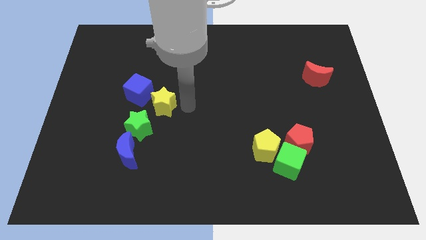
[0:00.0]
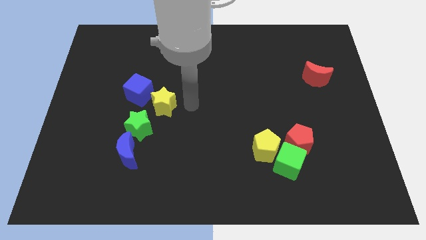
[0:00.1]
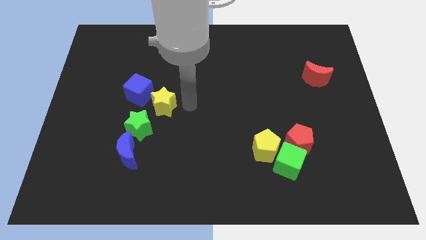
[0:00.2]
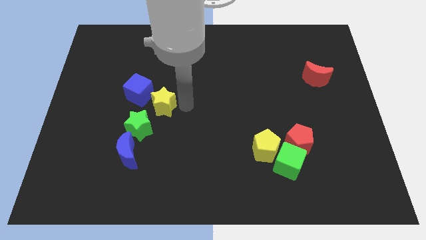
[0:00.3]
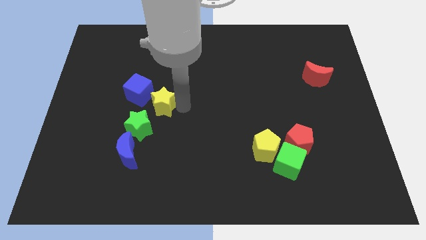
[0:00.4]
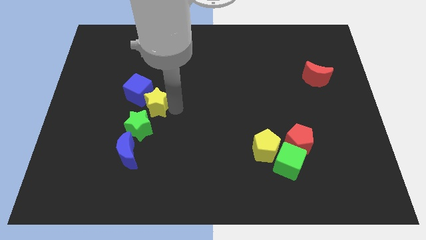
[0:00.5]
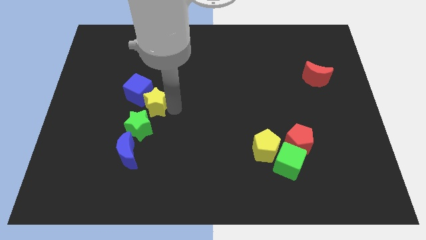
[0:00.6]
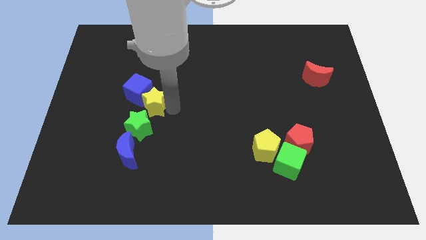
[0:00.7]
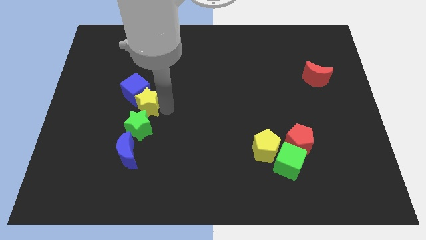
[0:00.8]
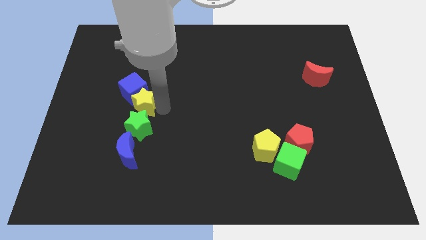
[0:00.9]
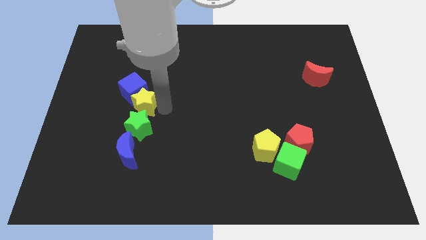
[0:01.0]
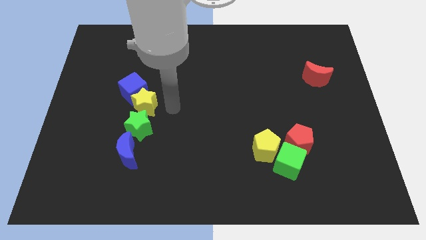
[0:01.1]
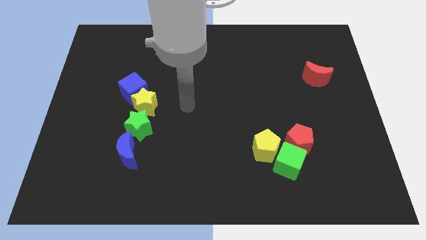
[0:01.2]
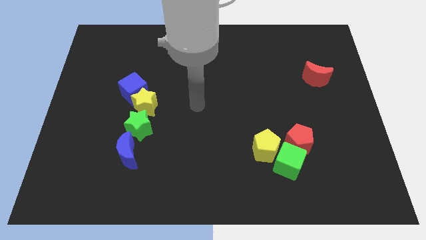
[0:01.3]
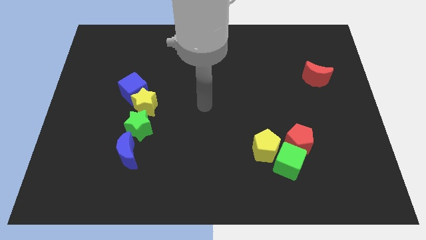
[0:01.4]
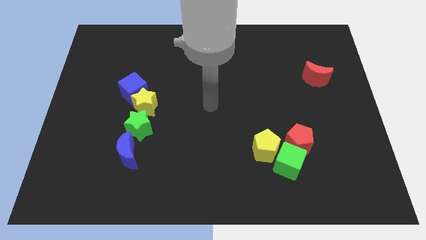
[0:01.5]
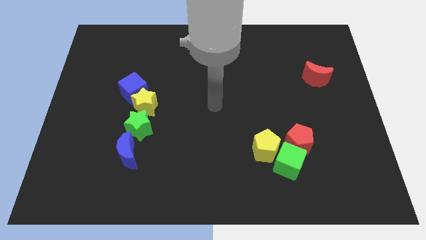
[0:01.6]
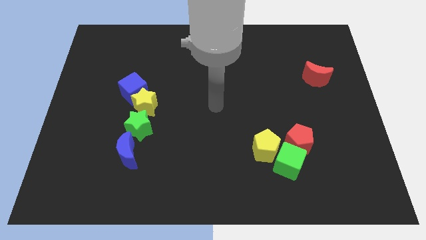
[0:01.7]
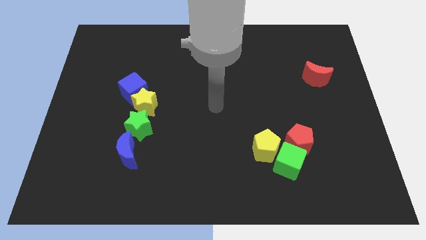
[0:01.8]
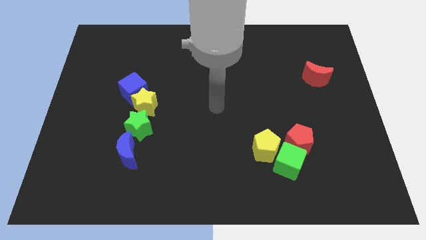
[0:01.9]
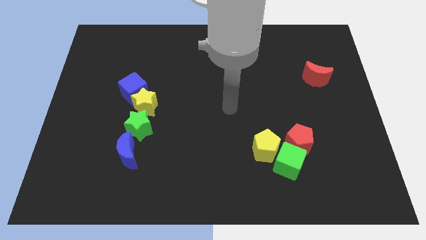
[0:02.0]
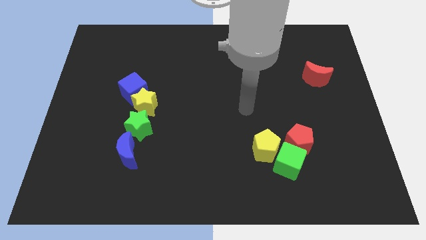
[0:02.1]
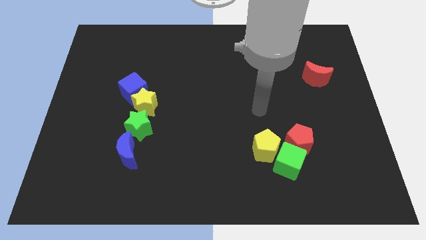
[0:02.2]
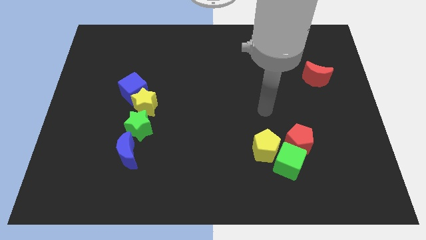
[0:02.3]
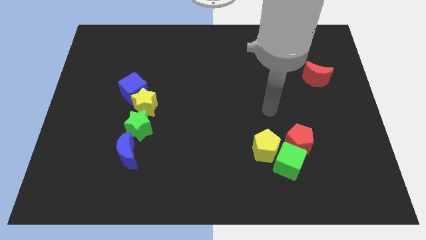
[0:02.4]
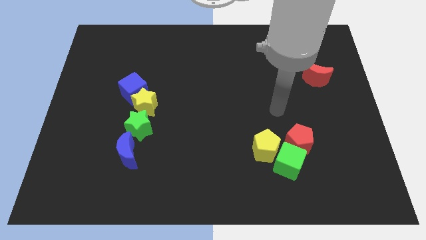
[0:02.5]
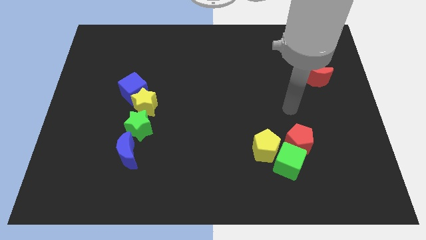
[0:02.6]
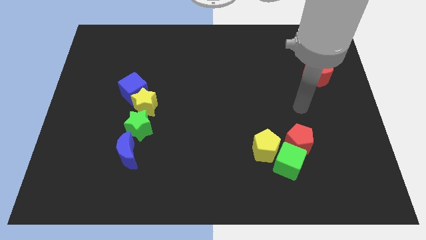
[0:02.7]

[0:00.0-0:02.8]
place the yellow star above the green star

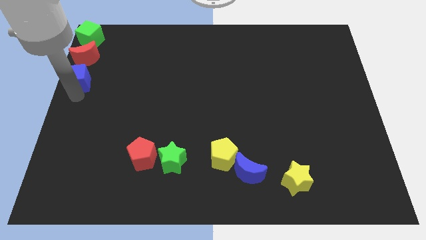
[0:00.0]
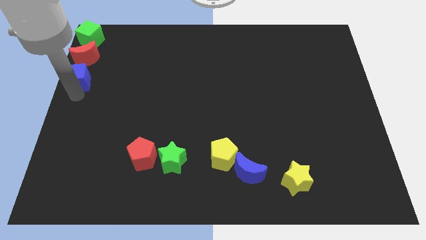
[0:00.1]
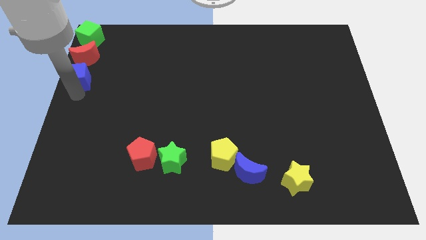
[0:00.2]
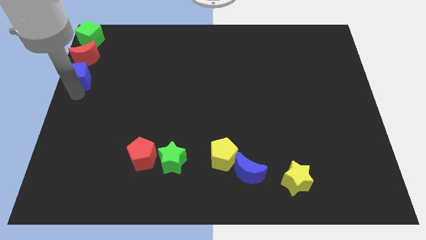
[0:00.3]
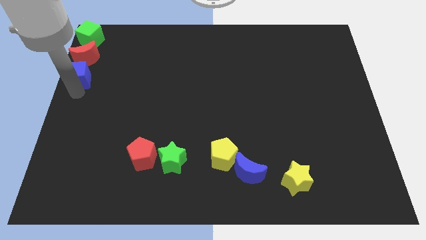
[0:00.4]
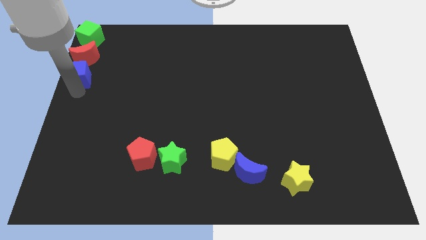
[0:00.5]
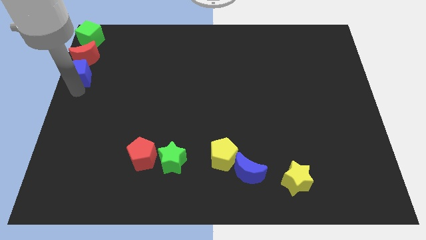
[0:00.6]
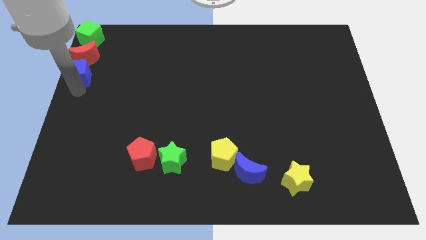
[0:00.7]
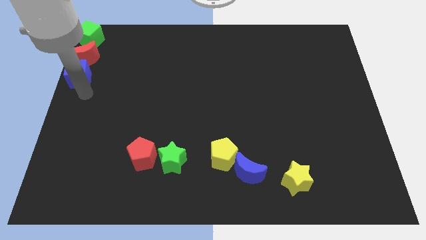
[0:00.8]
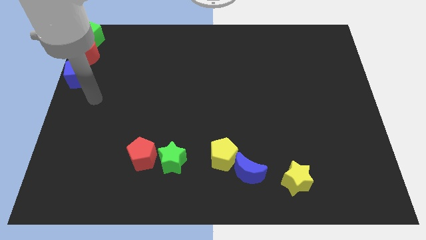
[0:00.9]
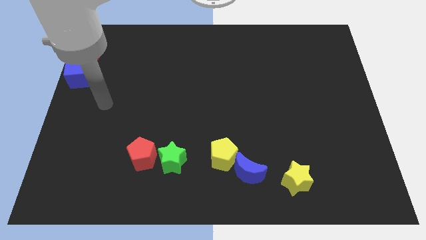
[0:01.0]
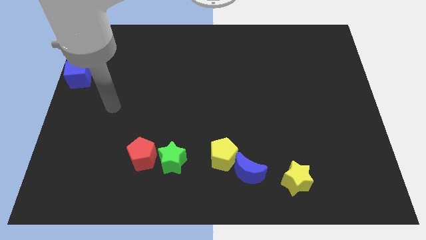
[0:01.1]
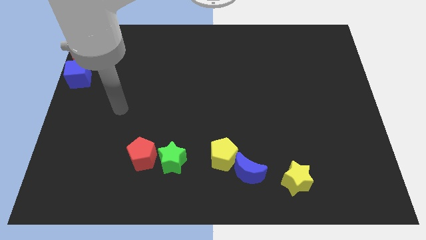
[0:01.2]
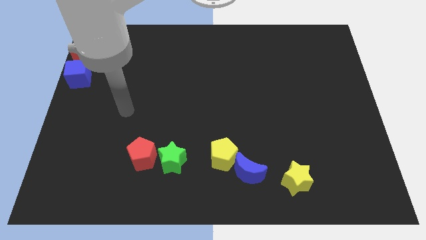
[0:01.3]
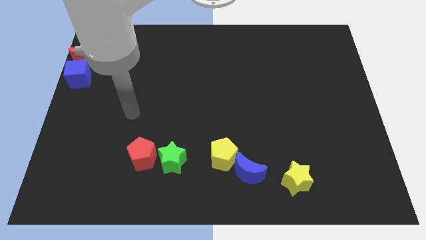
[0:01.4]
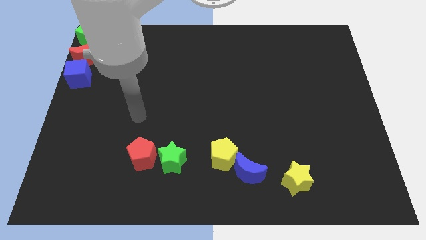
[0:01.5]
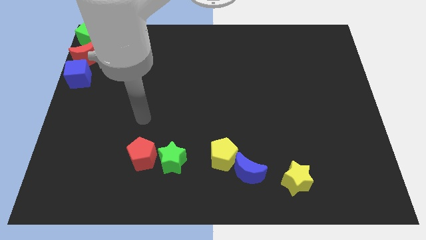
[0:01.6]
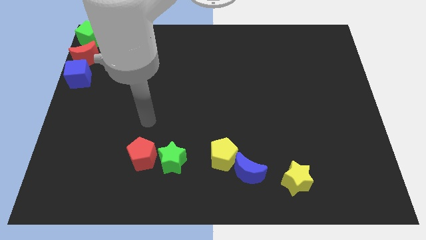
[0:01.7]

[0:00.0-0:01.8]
move the arm away from the blue cube

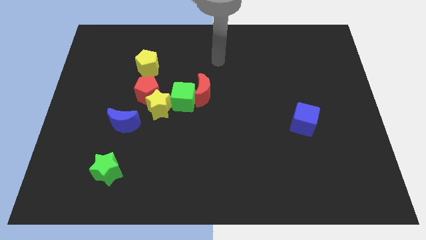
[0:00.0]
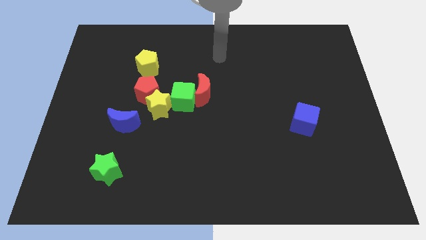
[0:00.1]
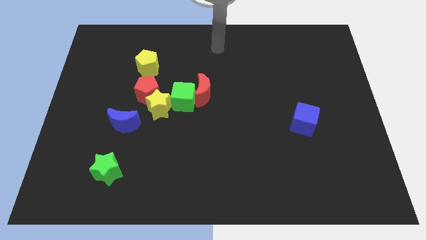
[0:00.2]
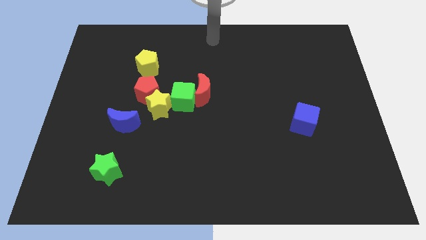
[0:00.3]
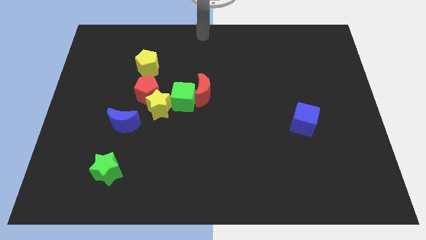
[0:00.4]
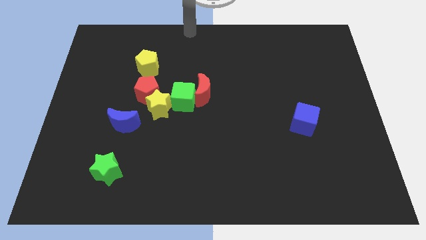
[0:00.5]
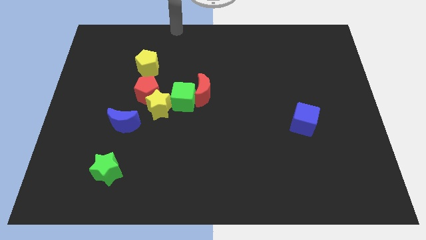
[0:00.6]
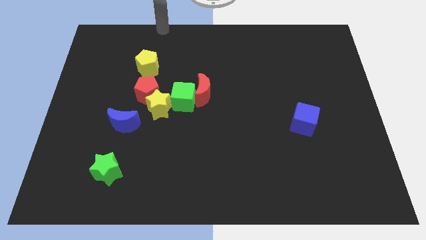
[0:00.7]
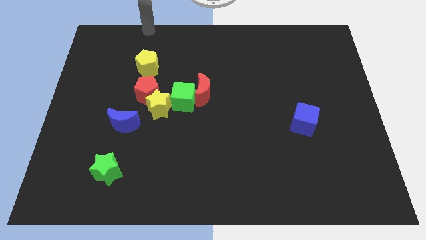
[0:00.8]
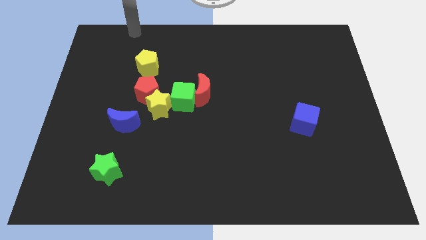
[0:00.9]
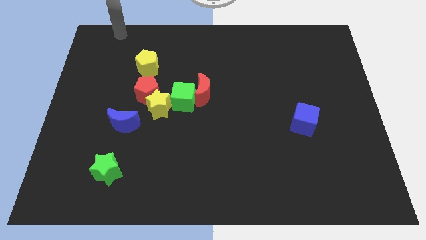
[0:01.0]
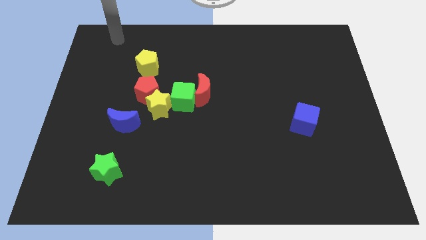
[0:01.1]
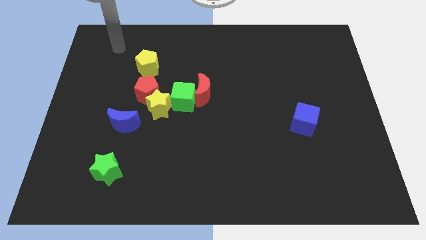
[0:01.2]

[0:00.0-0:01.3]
push your arm to the left

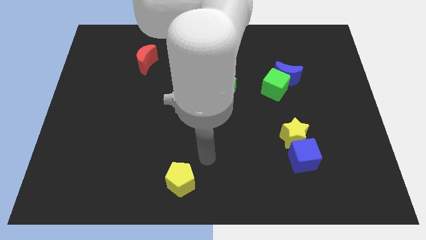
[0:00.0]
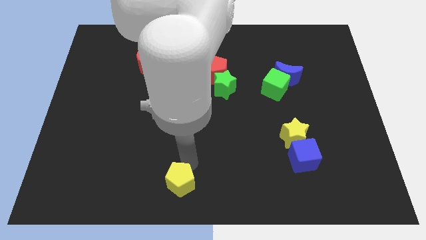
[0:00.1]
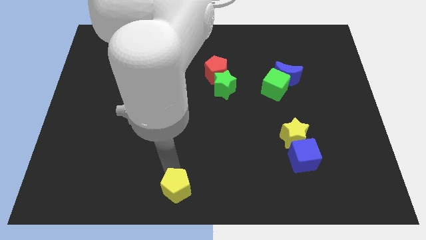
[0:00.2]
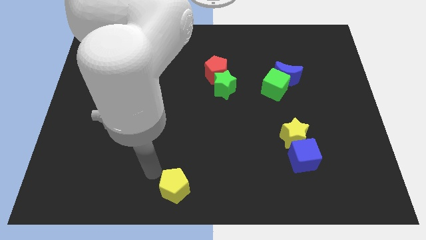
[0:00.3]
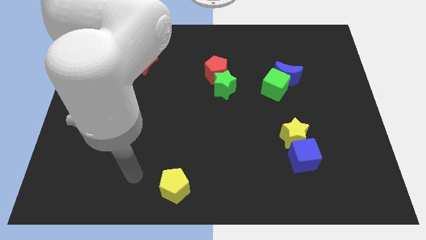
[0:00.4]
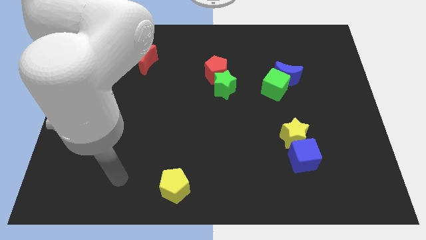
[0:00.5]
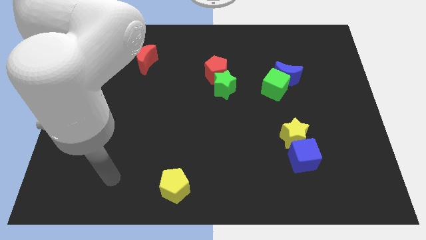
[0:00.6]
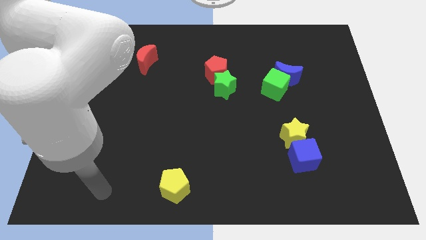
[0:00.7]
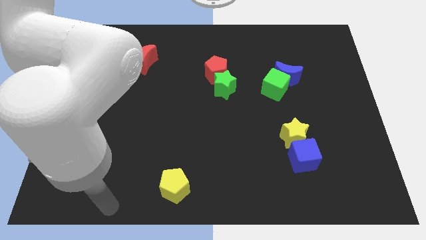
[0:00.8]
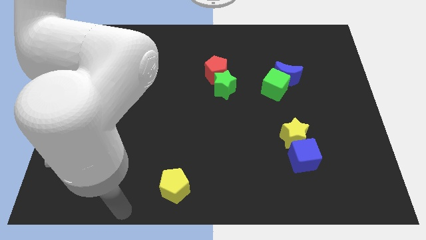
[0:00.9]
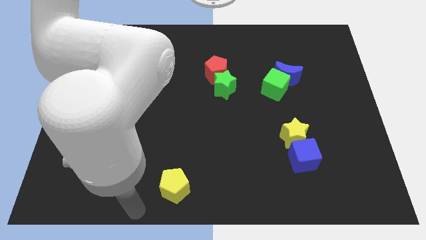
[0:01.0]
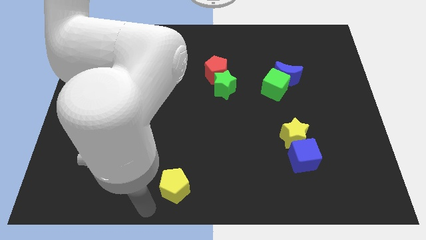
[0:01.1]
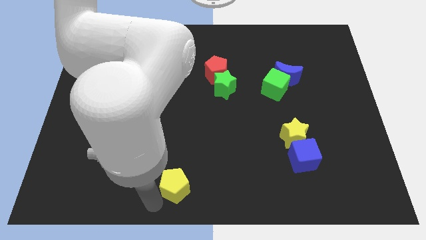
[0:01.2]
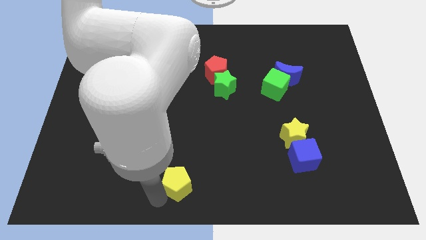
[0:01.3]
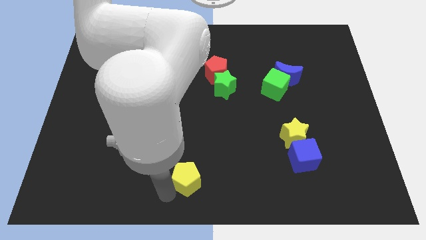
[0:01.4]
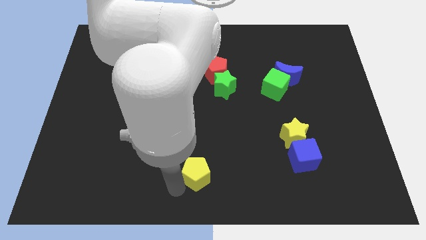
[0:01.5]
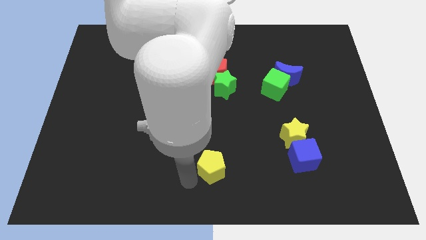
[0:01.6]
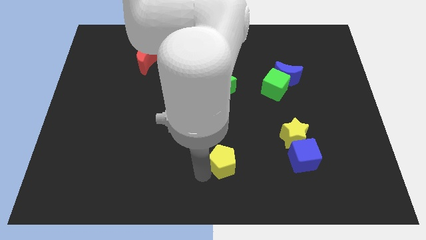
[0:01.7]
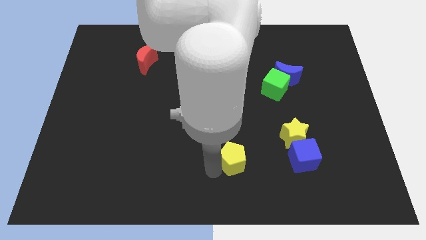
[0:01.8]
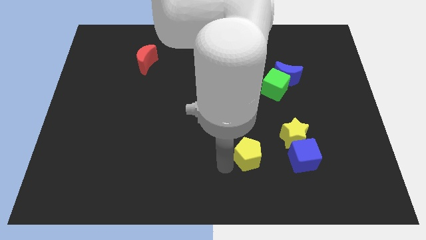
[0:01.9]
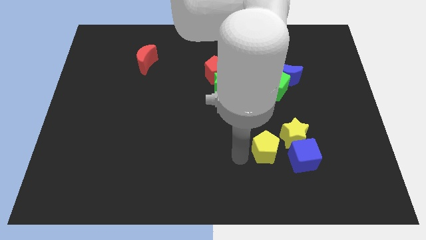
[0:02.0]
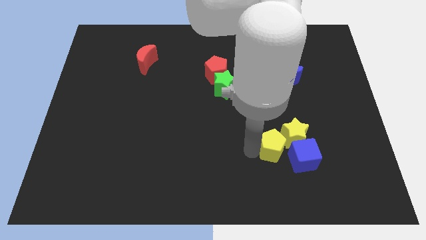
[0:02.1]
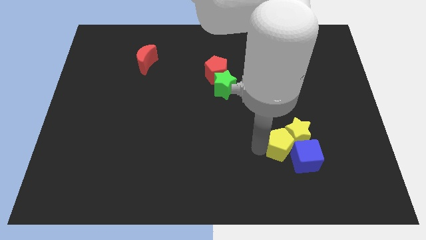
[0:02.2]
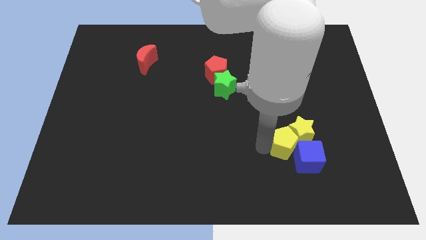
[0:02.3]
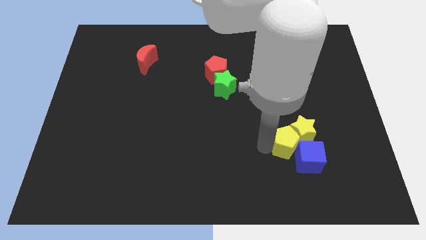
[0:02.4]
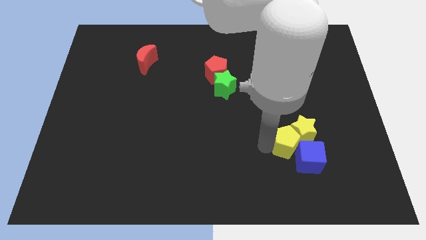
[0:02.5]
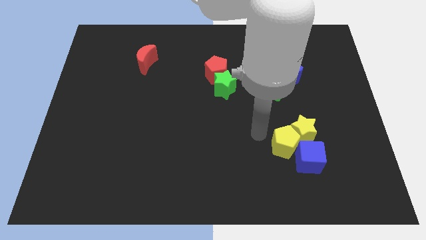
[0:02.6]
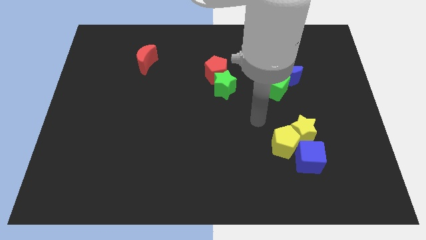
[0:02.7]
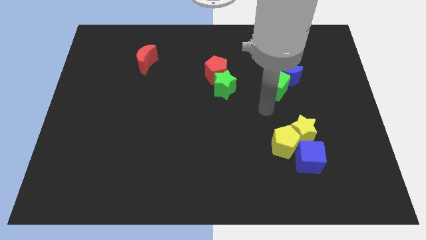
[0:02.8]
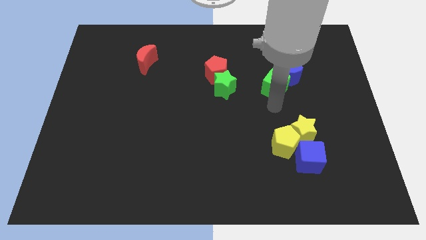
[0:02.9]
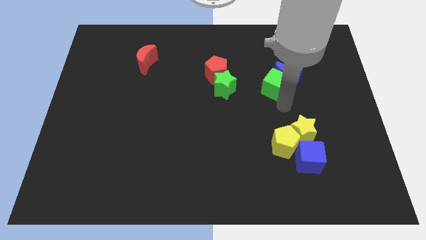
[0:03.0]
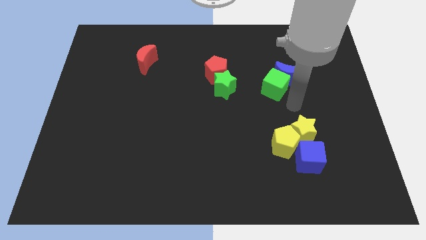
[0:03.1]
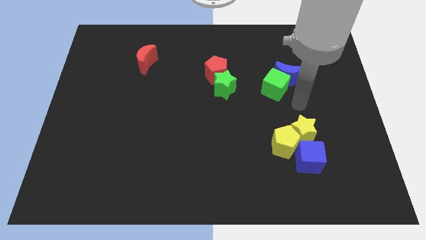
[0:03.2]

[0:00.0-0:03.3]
place yellow pentagon below green cube
